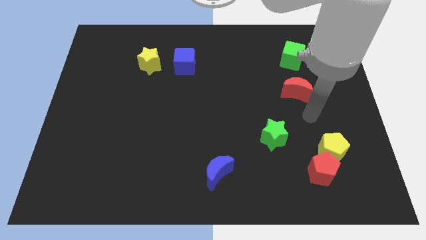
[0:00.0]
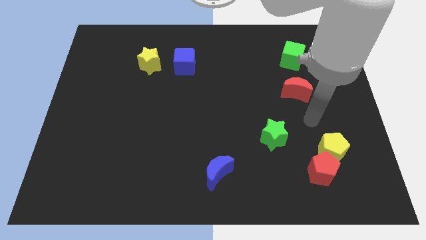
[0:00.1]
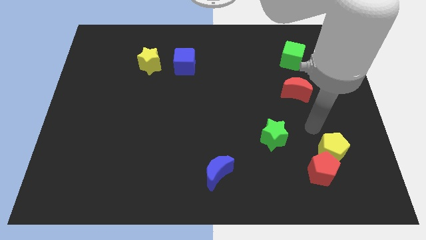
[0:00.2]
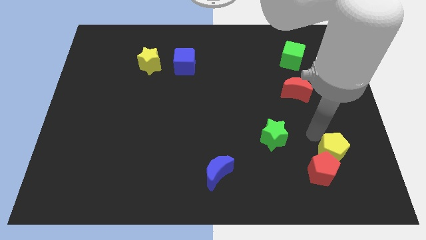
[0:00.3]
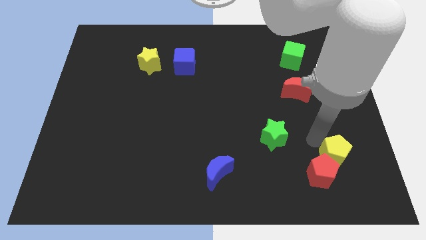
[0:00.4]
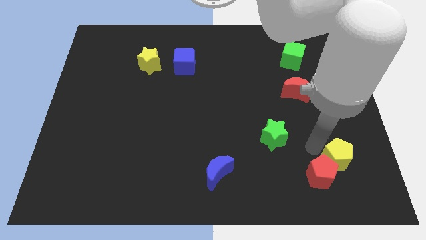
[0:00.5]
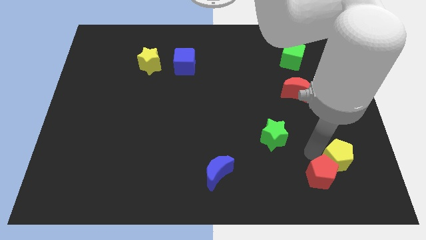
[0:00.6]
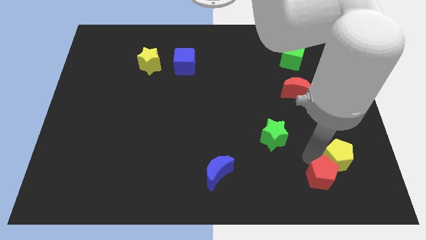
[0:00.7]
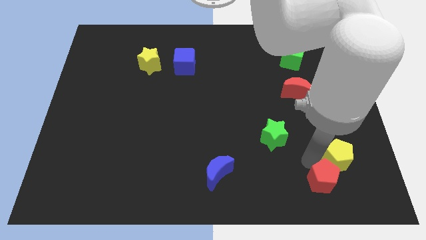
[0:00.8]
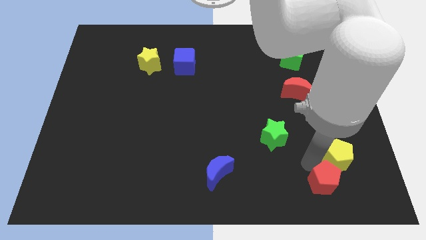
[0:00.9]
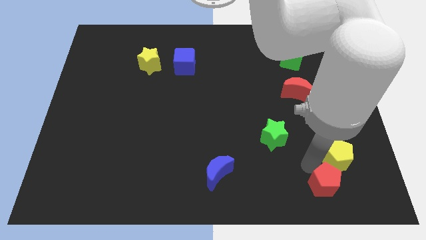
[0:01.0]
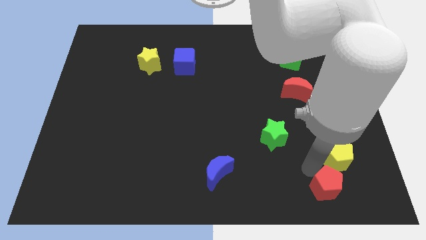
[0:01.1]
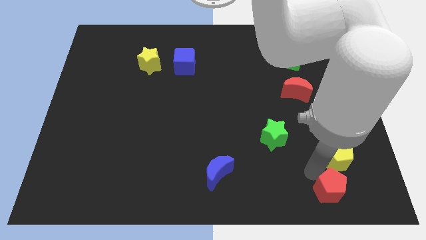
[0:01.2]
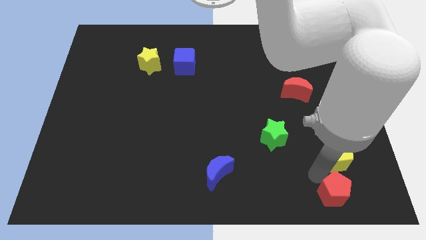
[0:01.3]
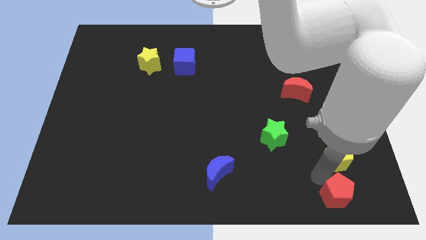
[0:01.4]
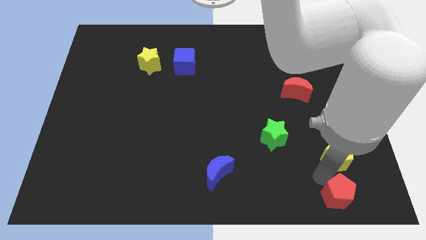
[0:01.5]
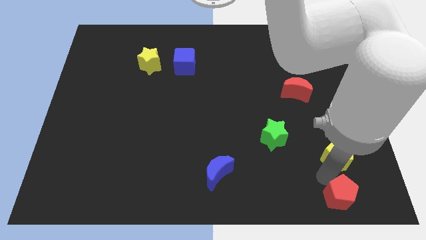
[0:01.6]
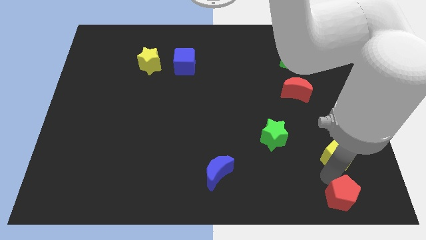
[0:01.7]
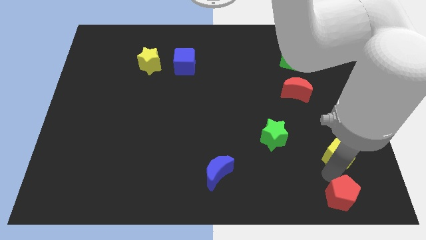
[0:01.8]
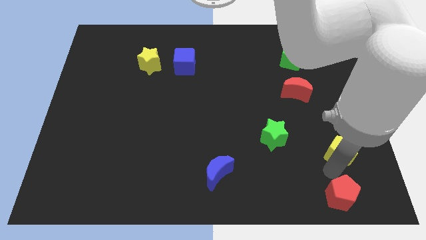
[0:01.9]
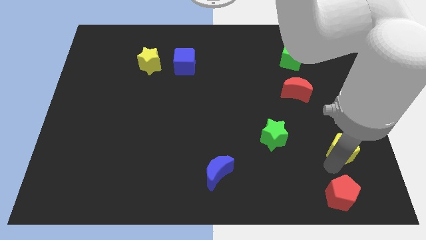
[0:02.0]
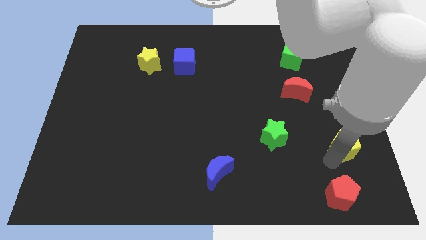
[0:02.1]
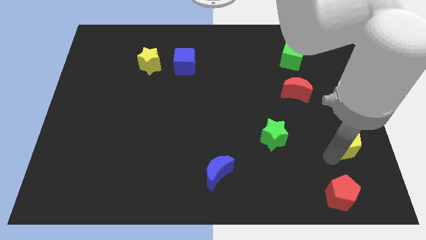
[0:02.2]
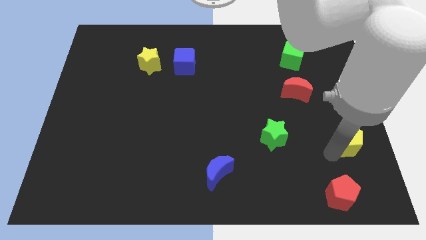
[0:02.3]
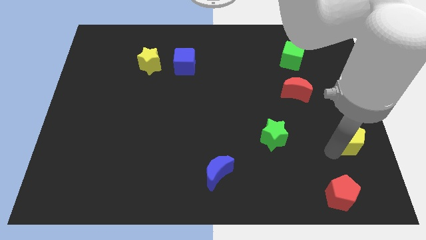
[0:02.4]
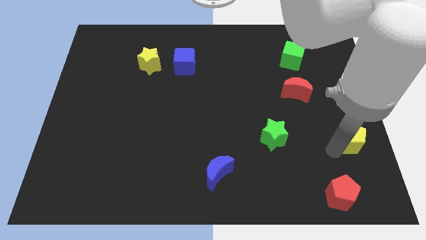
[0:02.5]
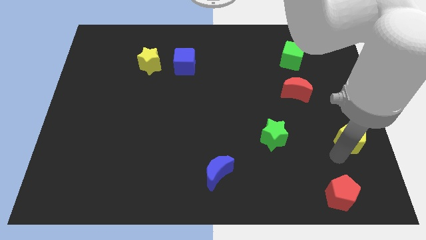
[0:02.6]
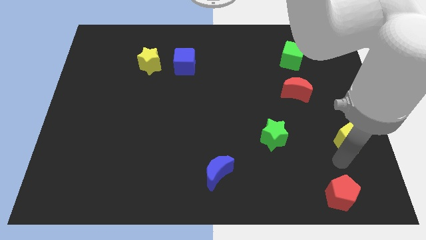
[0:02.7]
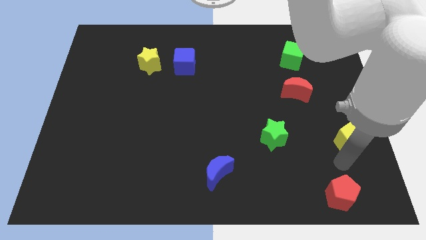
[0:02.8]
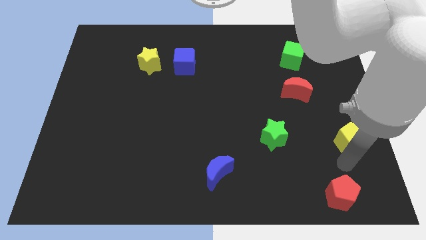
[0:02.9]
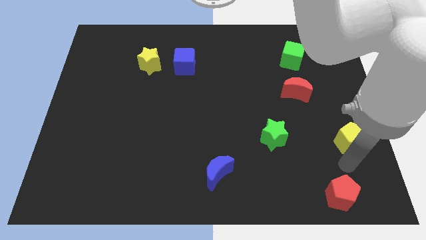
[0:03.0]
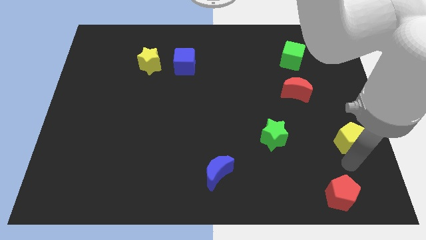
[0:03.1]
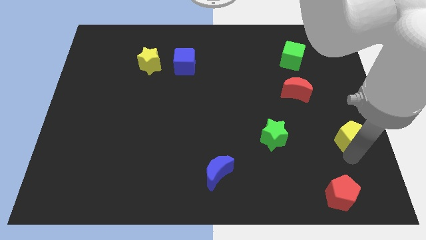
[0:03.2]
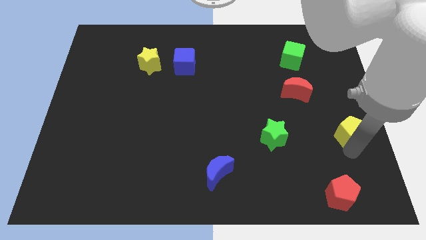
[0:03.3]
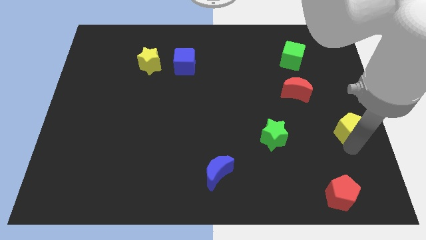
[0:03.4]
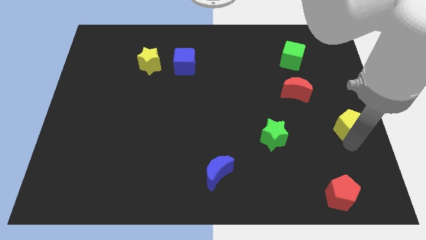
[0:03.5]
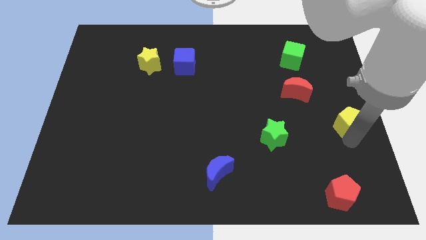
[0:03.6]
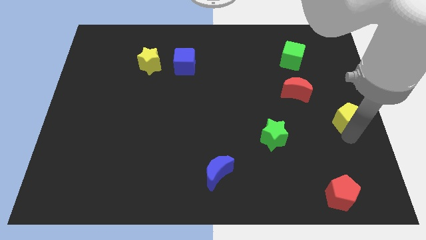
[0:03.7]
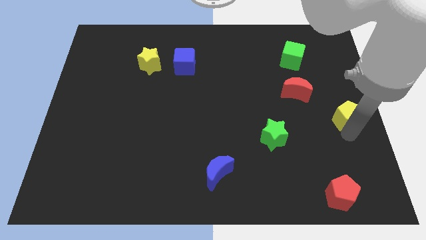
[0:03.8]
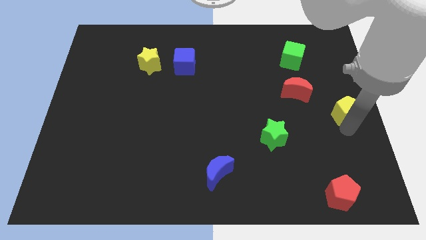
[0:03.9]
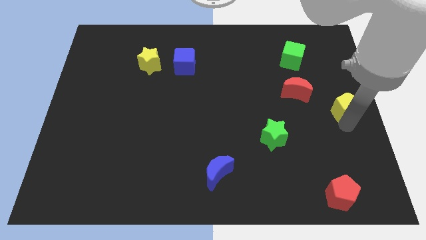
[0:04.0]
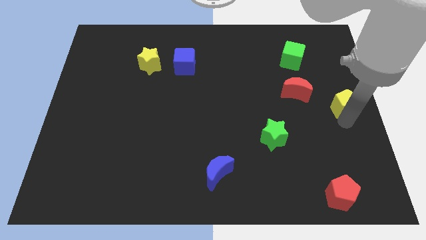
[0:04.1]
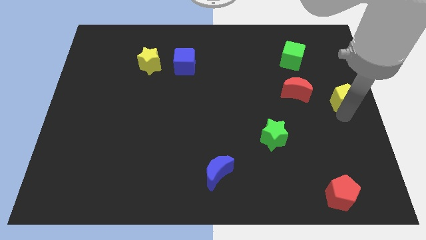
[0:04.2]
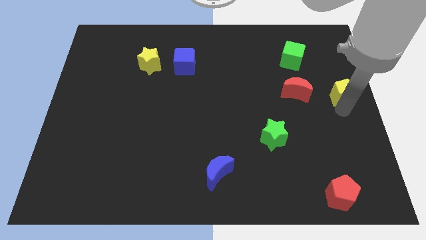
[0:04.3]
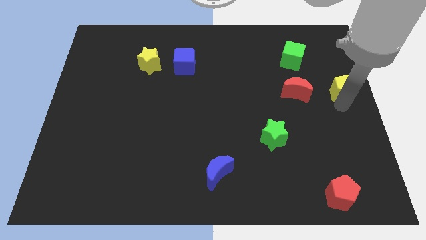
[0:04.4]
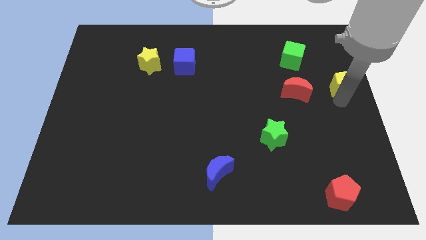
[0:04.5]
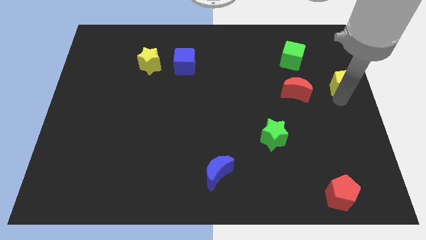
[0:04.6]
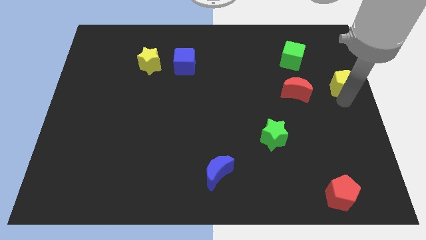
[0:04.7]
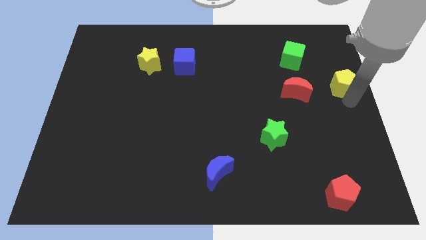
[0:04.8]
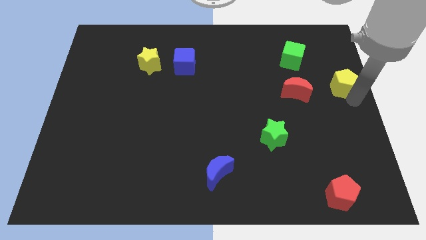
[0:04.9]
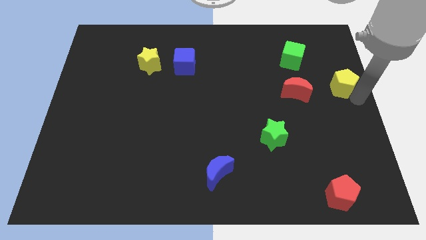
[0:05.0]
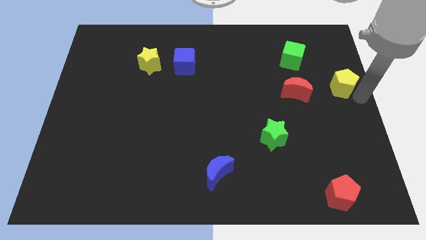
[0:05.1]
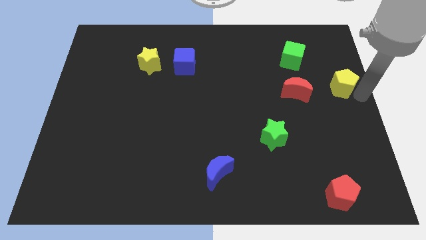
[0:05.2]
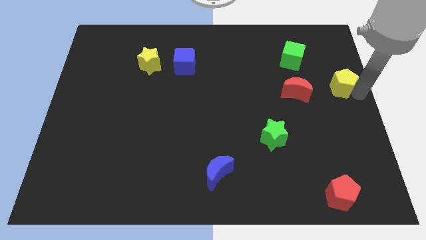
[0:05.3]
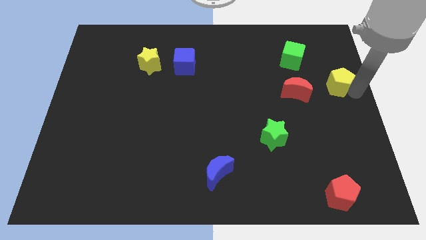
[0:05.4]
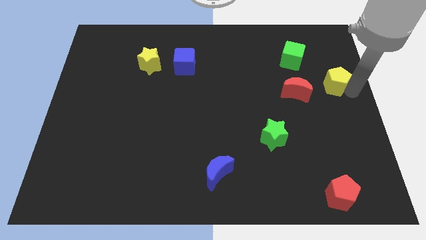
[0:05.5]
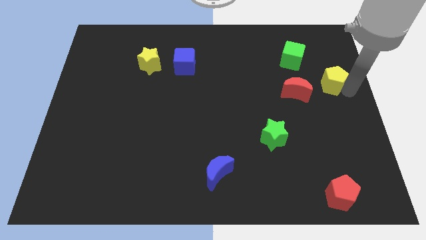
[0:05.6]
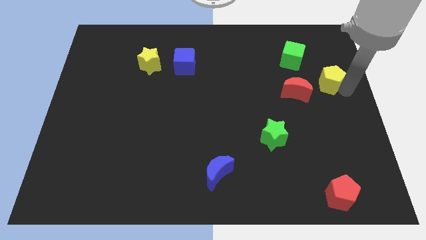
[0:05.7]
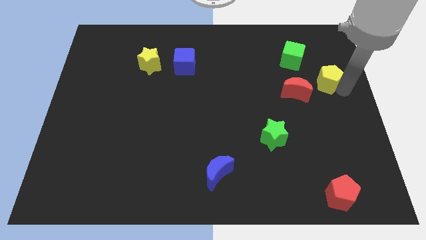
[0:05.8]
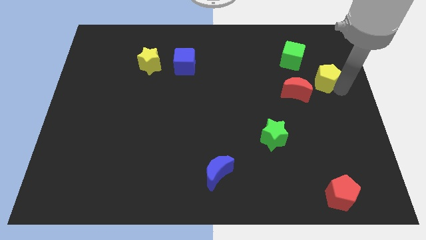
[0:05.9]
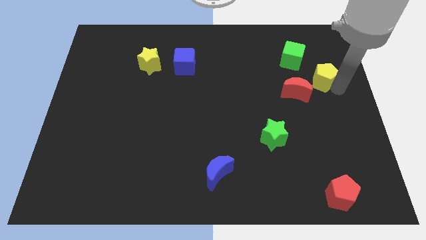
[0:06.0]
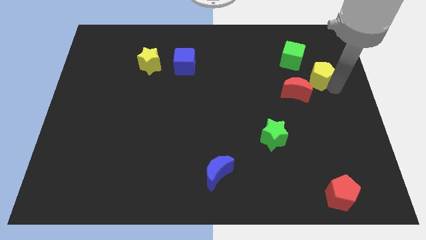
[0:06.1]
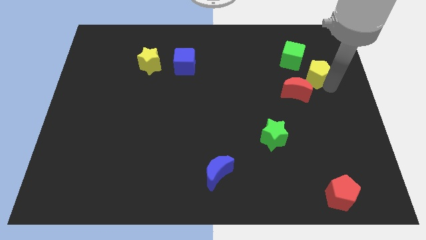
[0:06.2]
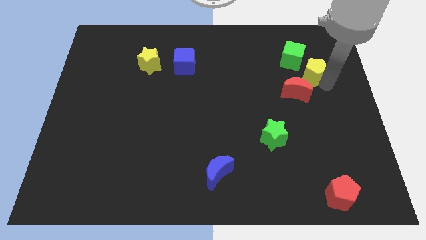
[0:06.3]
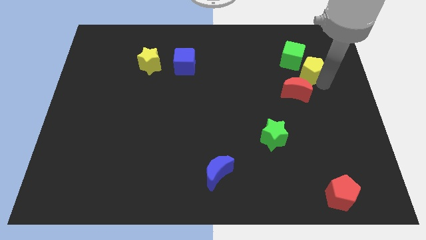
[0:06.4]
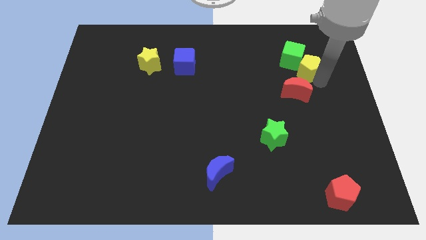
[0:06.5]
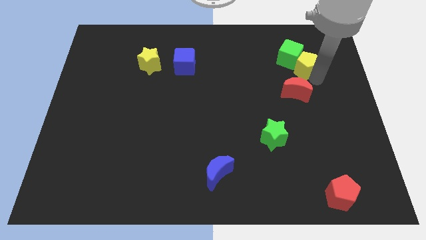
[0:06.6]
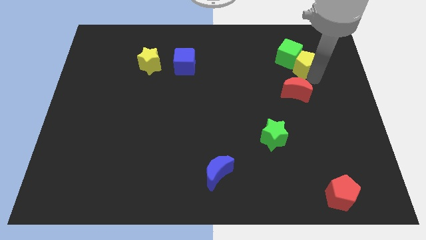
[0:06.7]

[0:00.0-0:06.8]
move the yellow pentagon next to the green cube

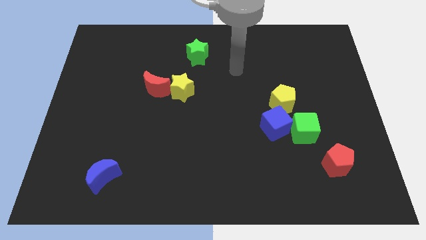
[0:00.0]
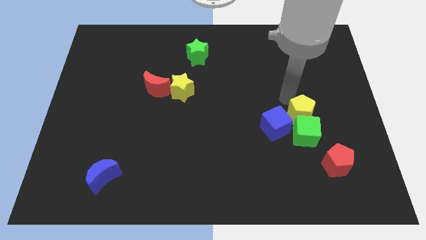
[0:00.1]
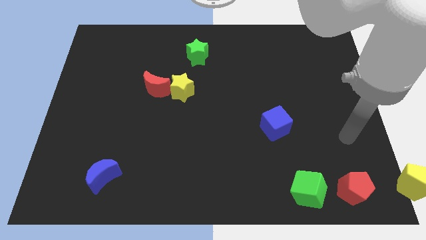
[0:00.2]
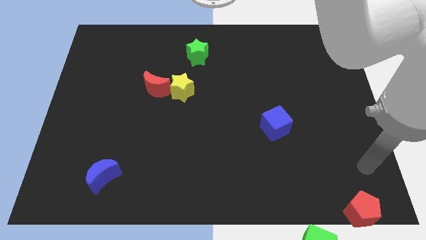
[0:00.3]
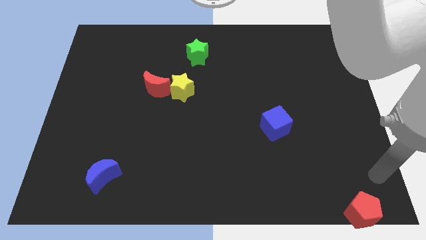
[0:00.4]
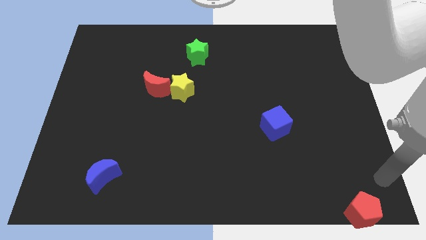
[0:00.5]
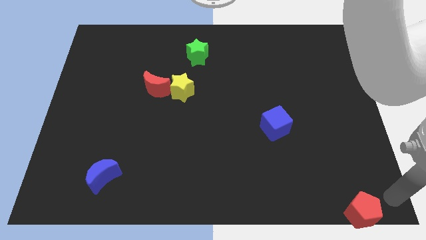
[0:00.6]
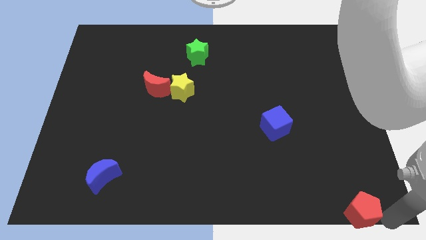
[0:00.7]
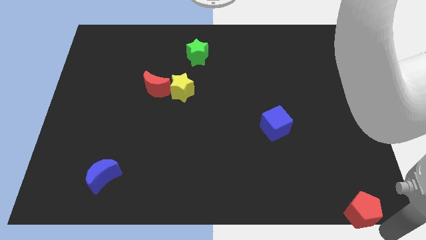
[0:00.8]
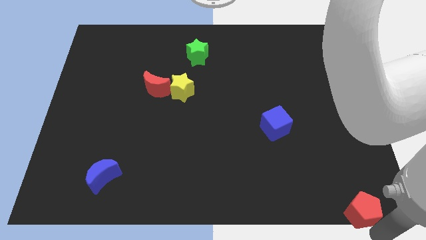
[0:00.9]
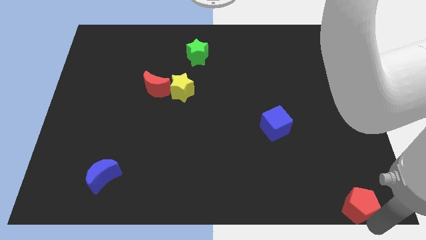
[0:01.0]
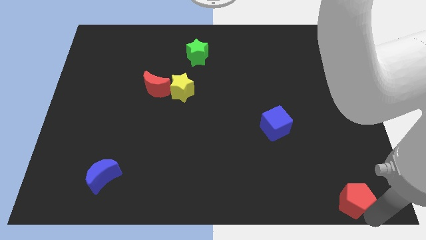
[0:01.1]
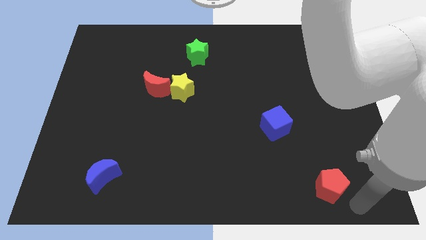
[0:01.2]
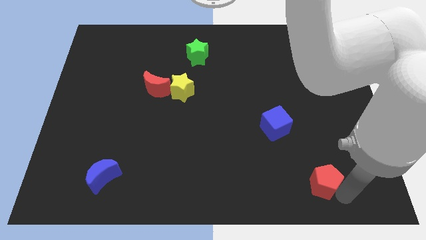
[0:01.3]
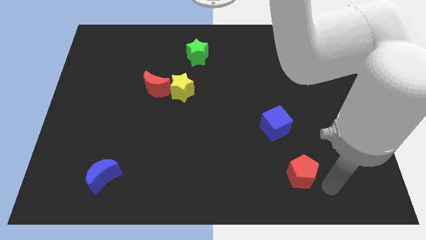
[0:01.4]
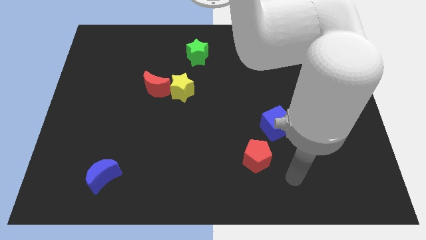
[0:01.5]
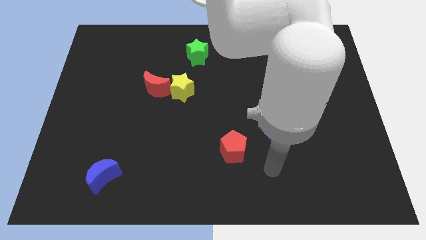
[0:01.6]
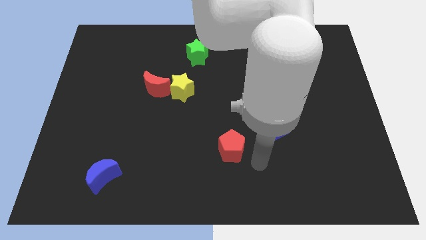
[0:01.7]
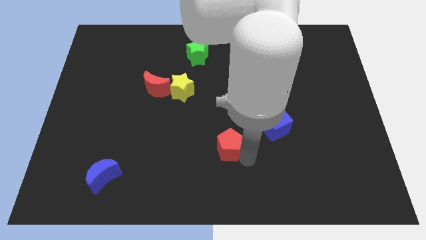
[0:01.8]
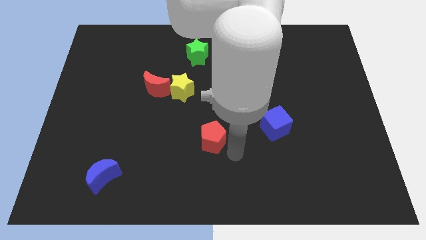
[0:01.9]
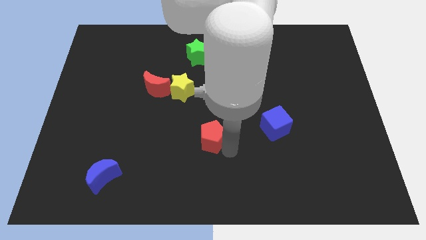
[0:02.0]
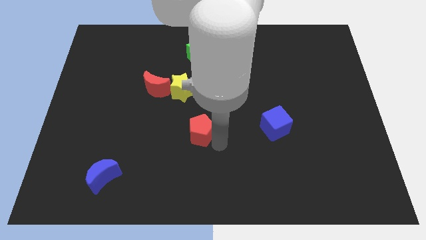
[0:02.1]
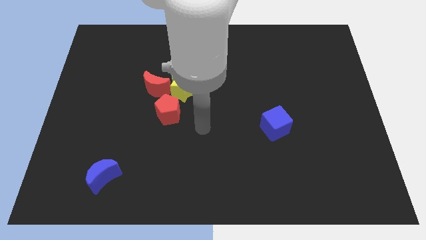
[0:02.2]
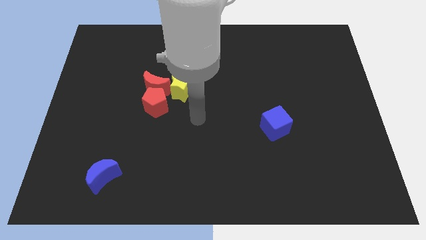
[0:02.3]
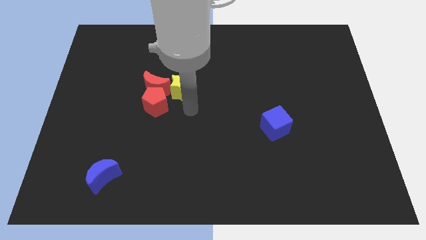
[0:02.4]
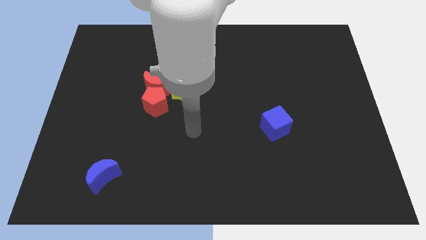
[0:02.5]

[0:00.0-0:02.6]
put the red pentagon next to the red moon
